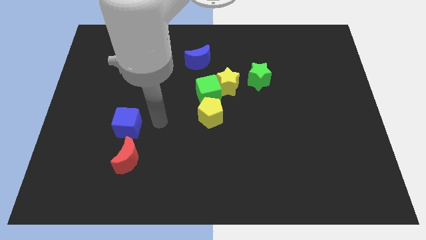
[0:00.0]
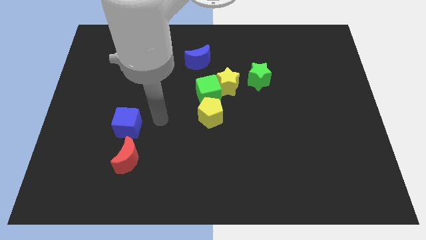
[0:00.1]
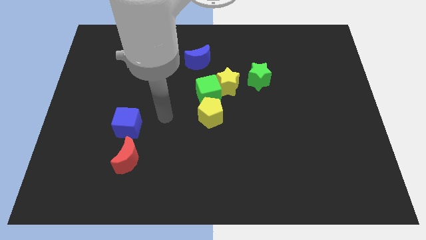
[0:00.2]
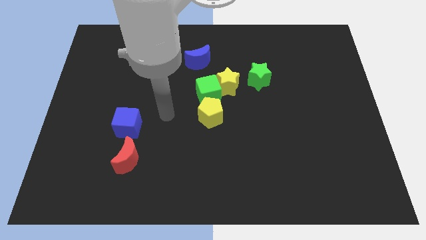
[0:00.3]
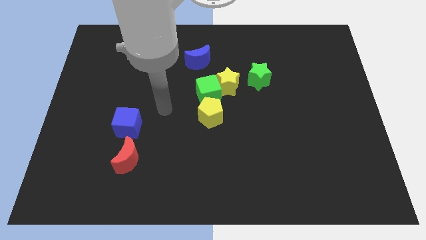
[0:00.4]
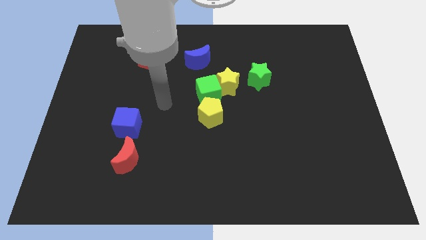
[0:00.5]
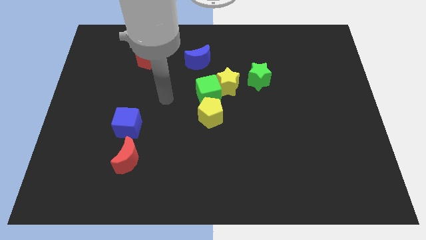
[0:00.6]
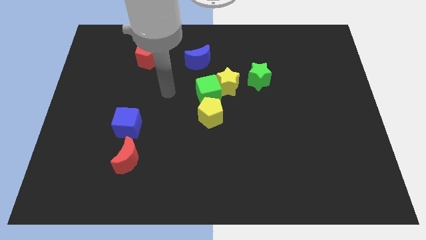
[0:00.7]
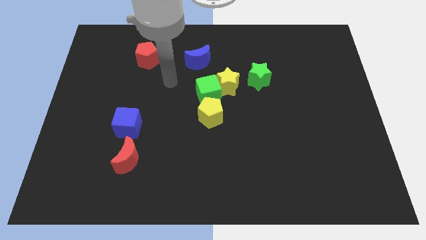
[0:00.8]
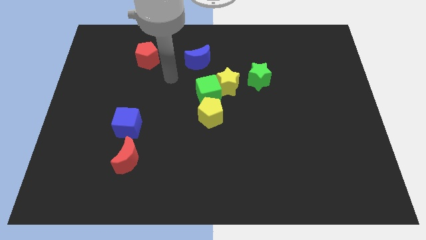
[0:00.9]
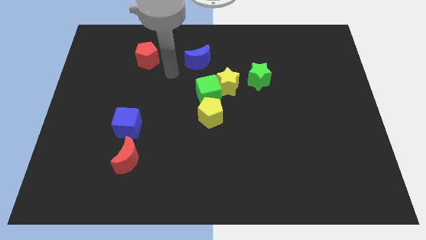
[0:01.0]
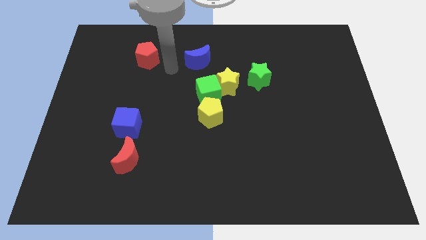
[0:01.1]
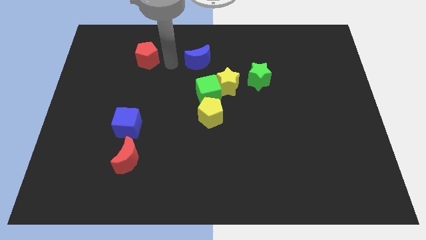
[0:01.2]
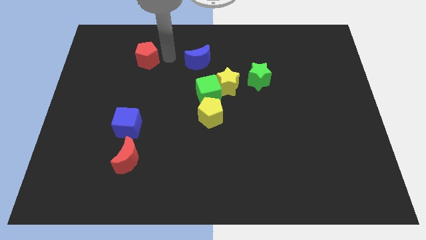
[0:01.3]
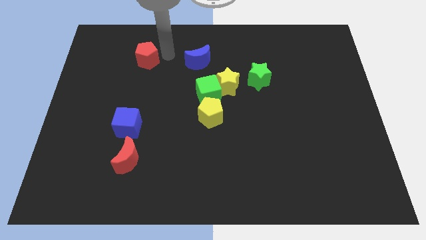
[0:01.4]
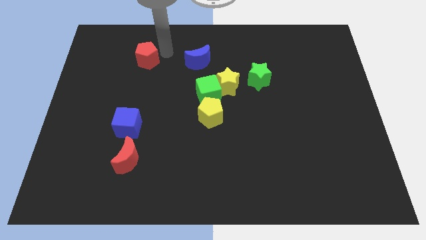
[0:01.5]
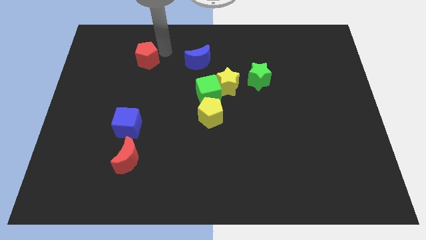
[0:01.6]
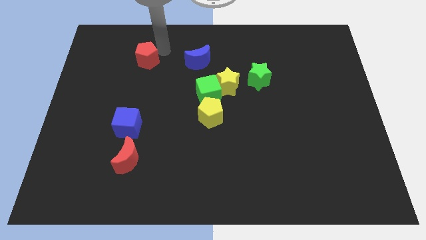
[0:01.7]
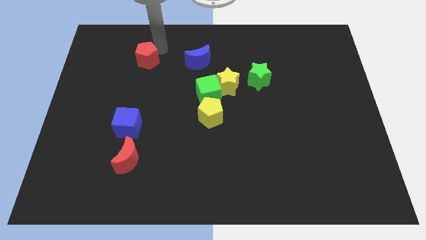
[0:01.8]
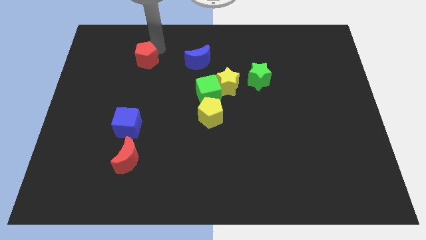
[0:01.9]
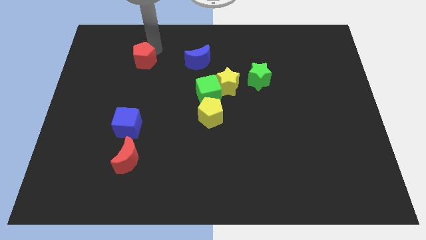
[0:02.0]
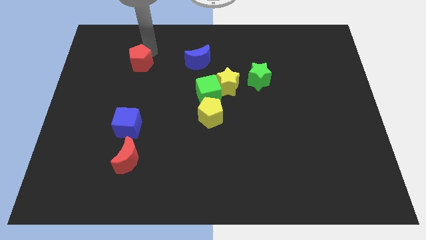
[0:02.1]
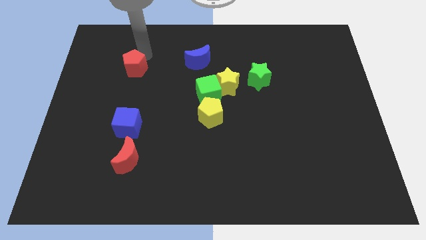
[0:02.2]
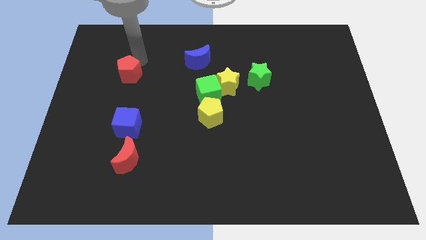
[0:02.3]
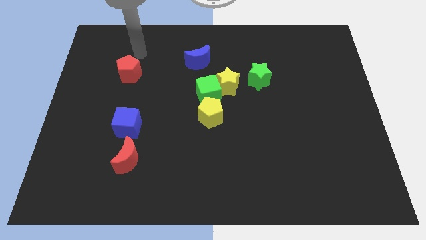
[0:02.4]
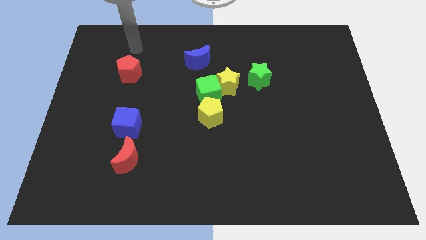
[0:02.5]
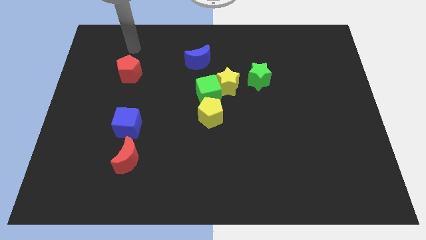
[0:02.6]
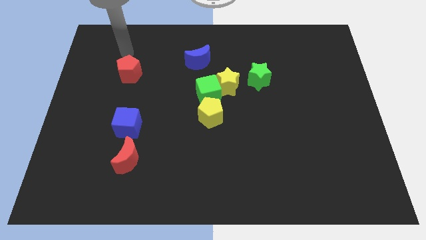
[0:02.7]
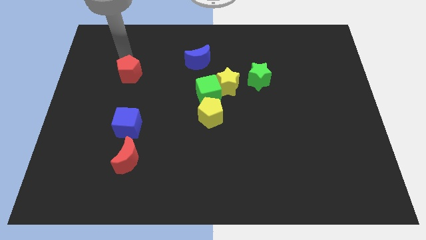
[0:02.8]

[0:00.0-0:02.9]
push red pentagon slightly down

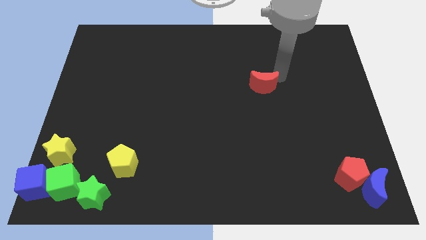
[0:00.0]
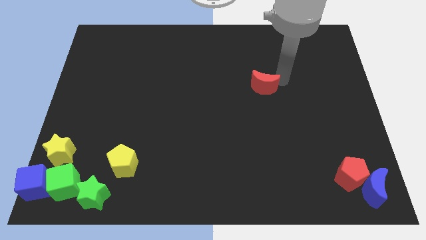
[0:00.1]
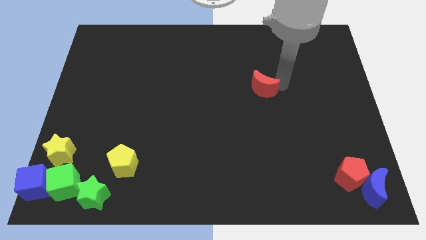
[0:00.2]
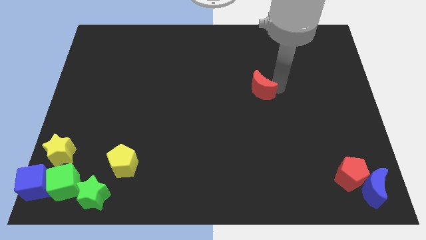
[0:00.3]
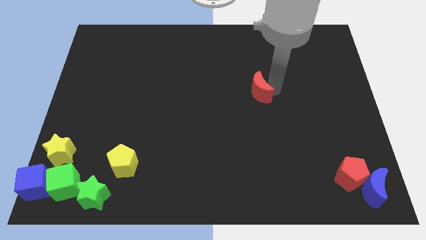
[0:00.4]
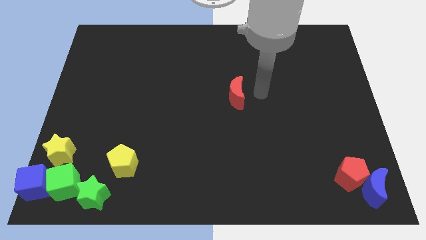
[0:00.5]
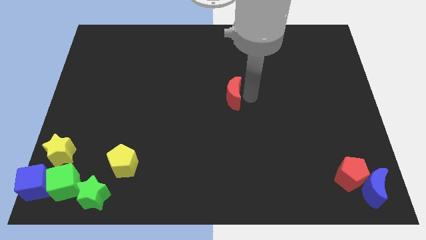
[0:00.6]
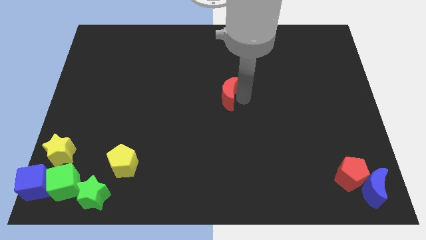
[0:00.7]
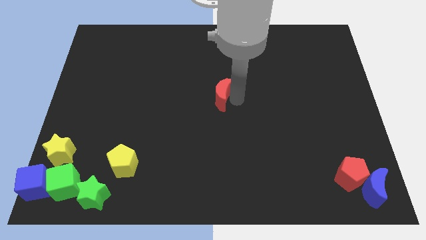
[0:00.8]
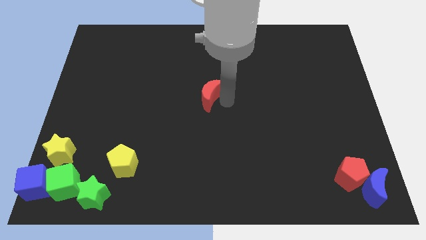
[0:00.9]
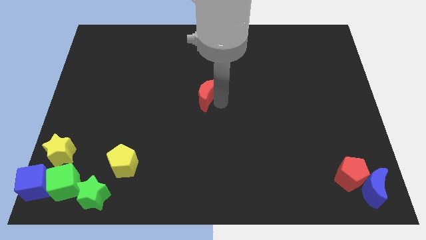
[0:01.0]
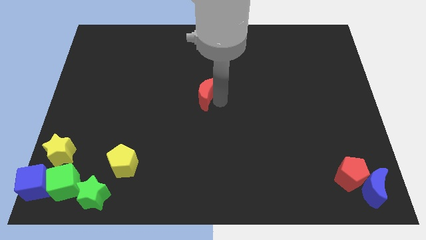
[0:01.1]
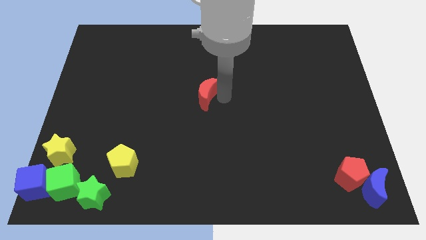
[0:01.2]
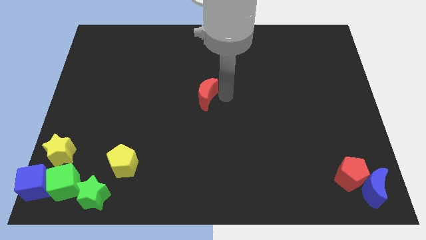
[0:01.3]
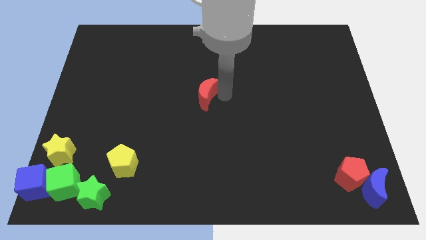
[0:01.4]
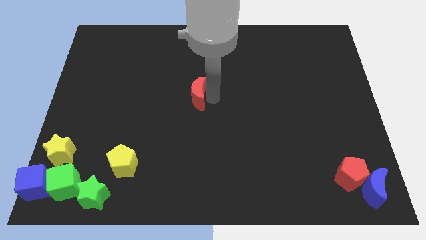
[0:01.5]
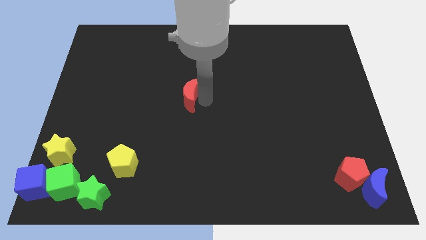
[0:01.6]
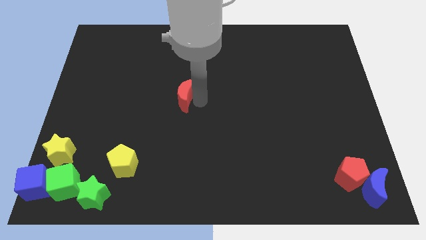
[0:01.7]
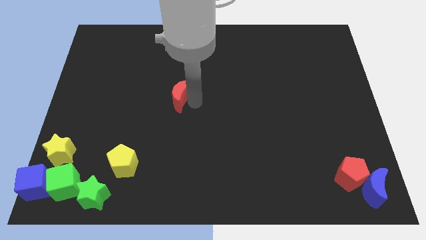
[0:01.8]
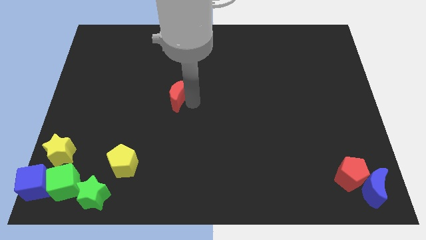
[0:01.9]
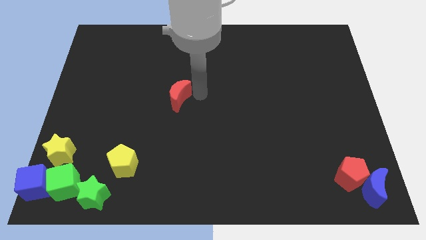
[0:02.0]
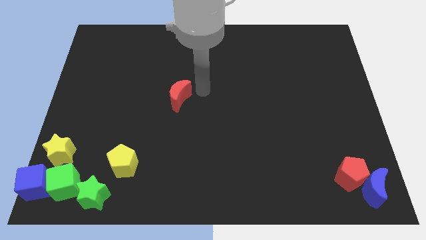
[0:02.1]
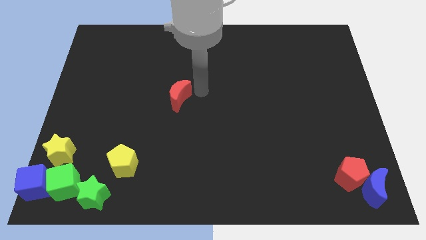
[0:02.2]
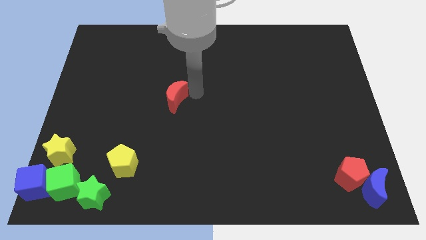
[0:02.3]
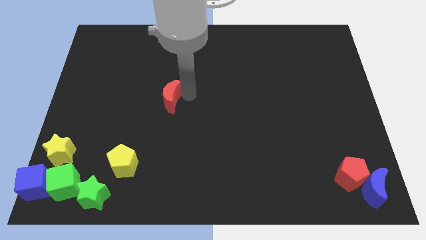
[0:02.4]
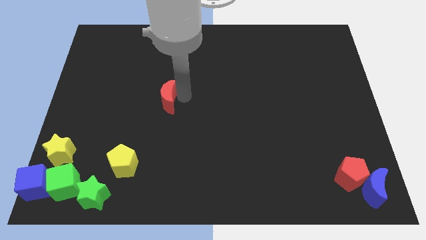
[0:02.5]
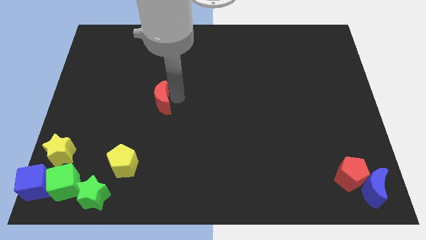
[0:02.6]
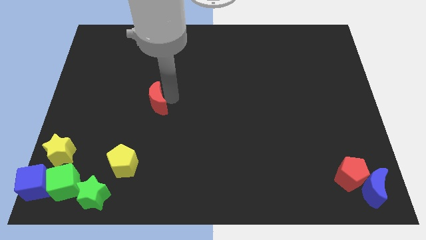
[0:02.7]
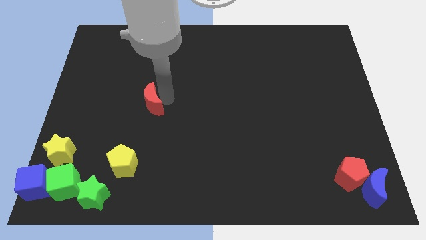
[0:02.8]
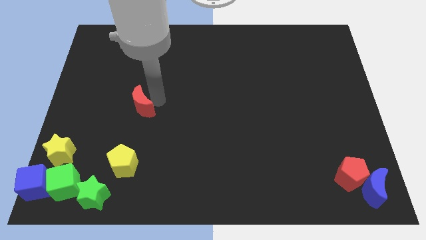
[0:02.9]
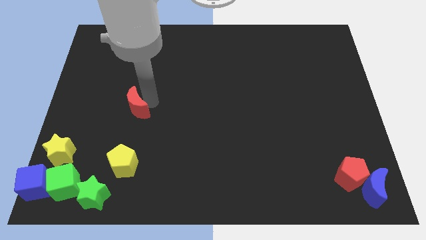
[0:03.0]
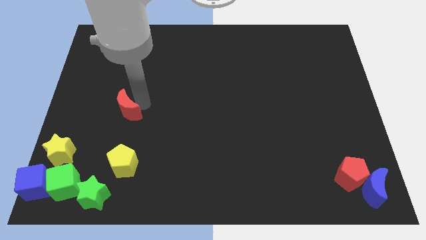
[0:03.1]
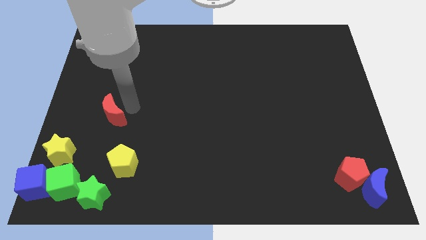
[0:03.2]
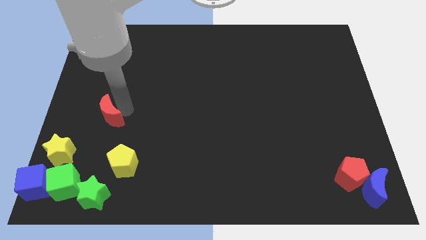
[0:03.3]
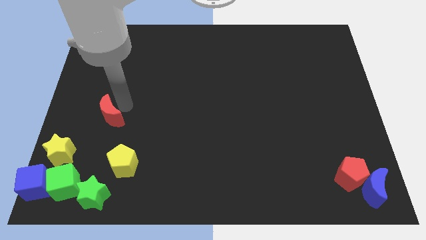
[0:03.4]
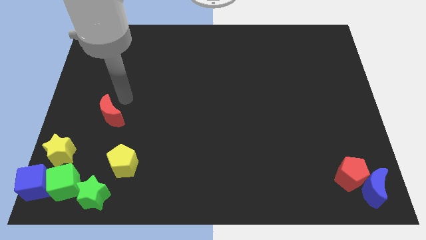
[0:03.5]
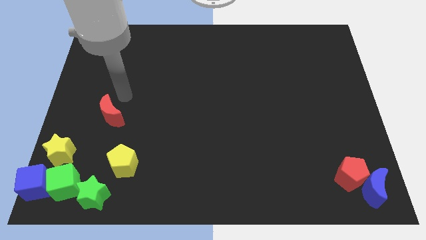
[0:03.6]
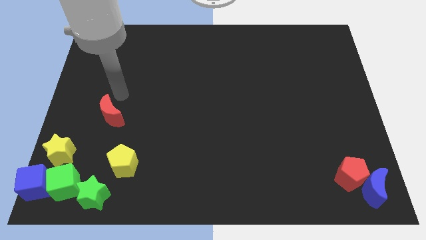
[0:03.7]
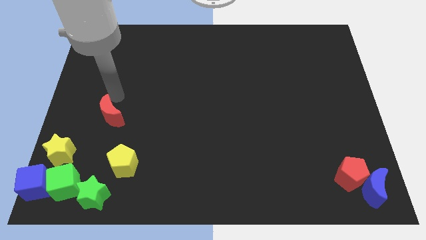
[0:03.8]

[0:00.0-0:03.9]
put the red moon vertically above the yellow pentagon

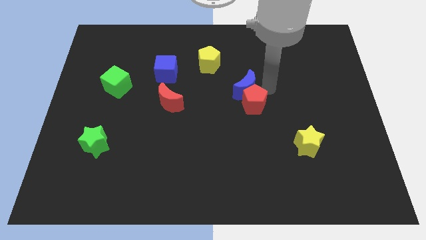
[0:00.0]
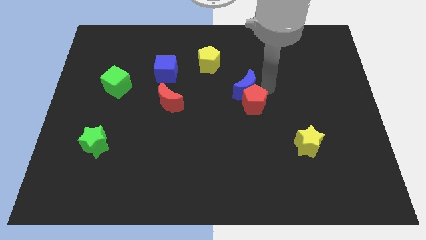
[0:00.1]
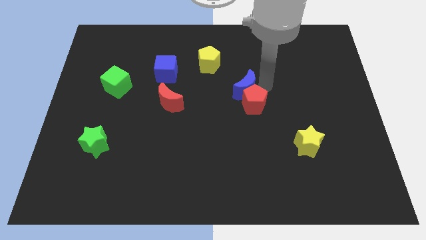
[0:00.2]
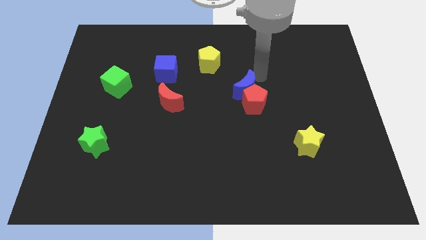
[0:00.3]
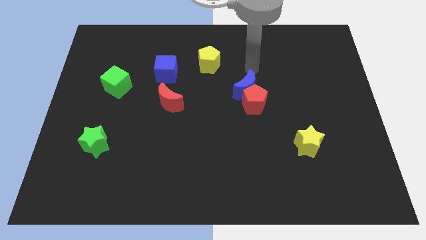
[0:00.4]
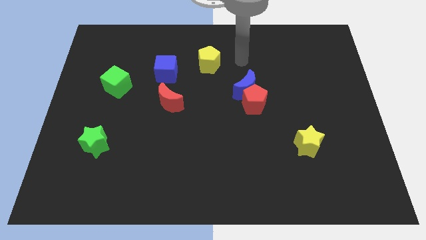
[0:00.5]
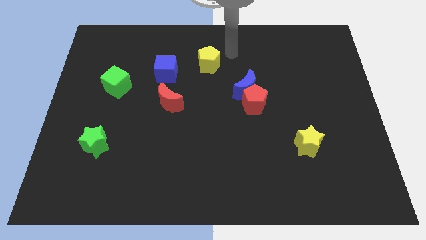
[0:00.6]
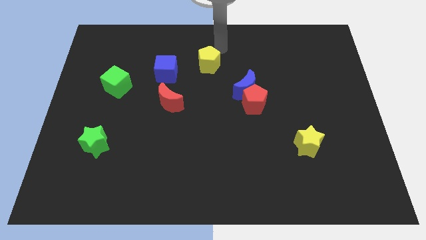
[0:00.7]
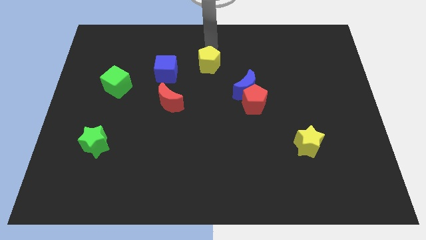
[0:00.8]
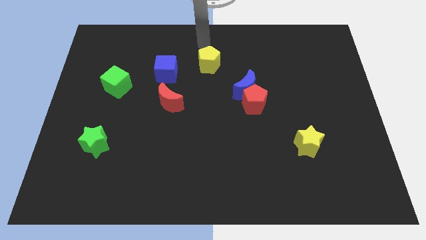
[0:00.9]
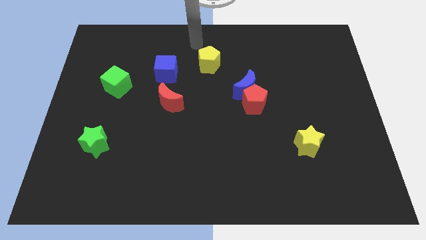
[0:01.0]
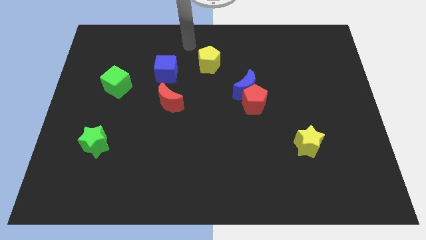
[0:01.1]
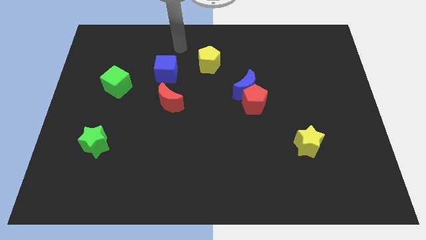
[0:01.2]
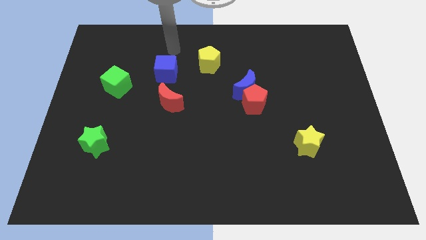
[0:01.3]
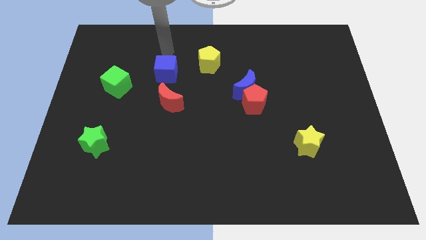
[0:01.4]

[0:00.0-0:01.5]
point your arm at the top side of the blue cube

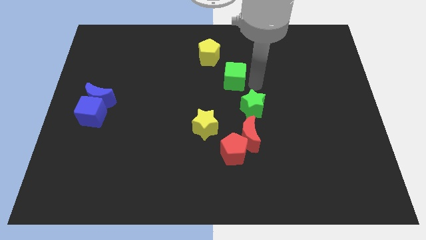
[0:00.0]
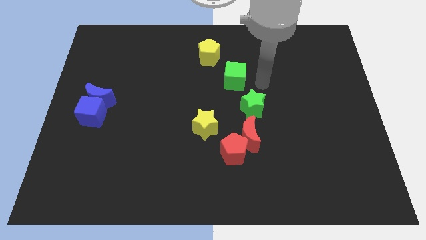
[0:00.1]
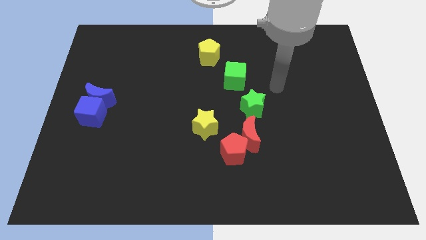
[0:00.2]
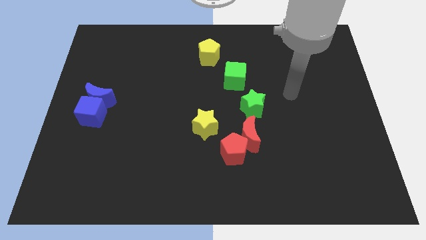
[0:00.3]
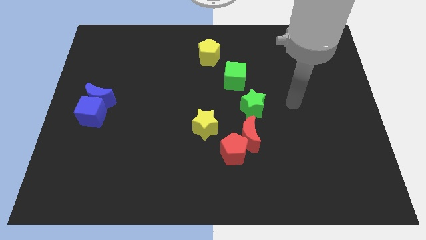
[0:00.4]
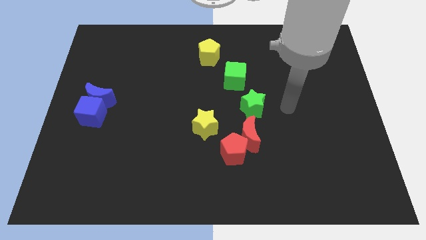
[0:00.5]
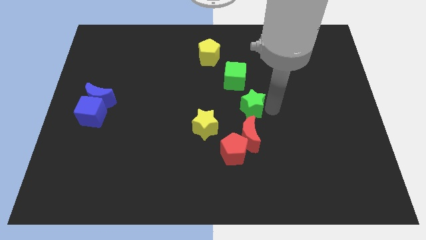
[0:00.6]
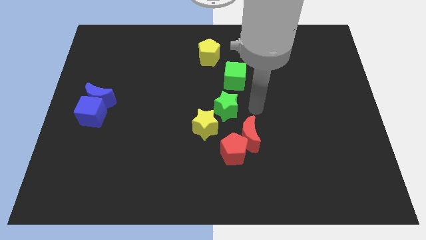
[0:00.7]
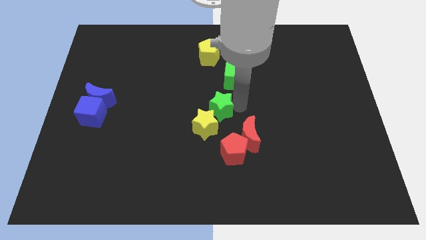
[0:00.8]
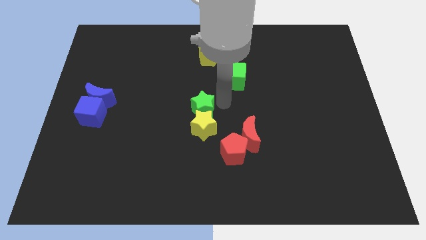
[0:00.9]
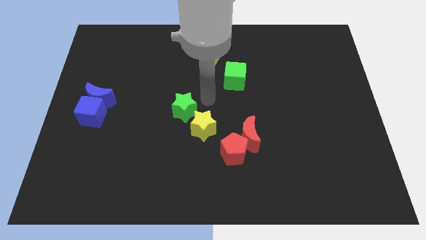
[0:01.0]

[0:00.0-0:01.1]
push the green star slightly to the left
